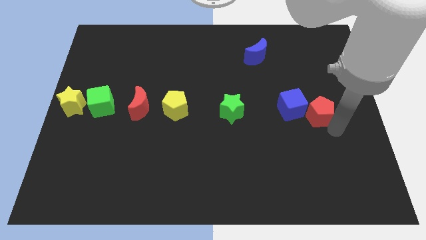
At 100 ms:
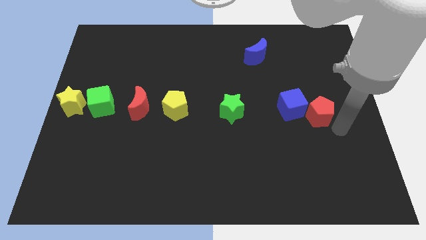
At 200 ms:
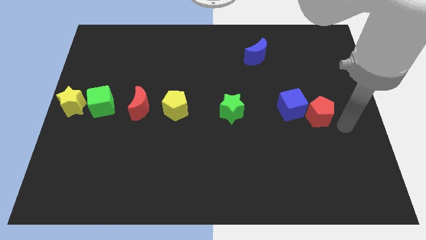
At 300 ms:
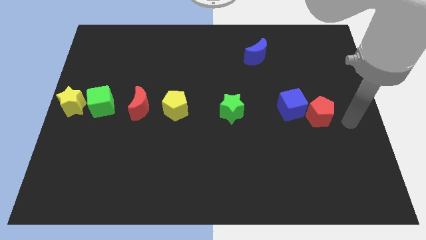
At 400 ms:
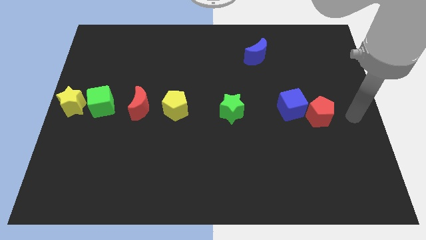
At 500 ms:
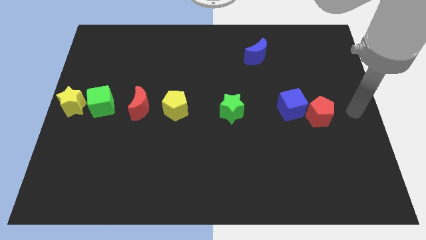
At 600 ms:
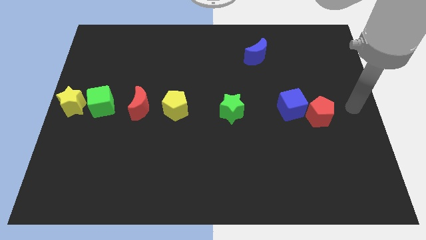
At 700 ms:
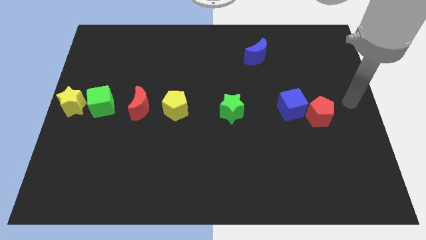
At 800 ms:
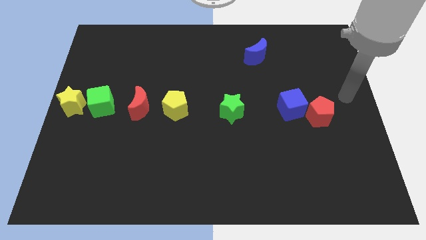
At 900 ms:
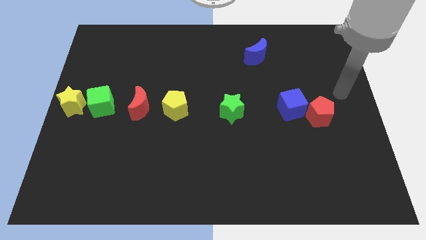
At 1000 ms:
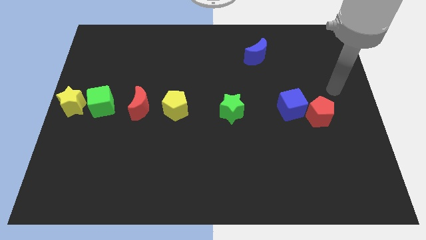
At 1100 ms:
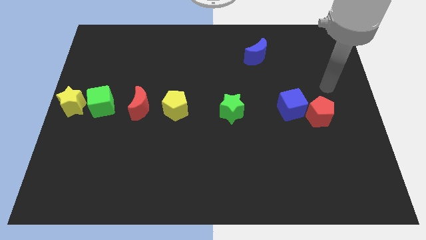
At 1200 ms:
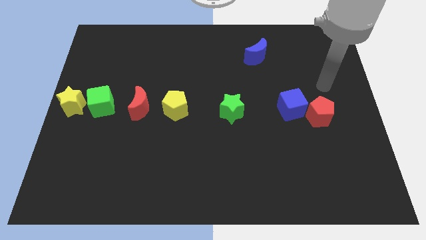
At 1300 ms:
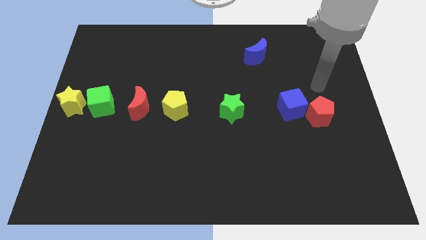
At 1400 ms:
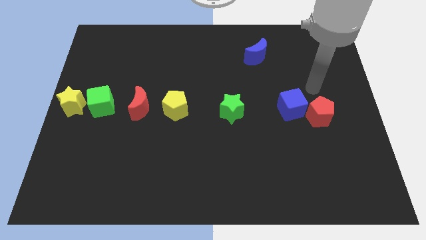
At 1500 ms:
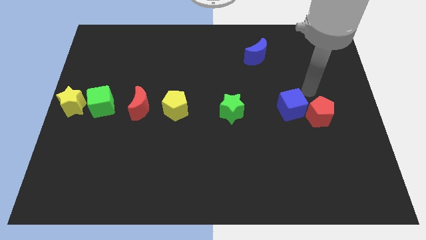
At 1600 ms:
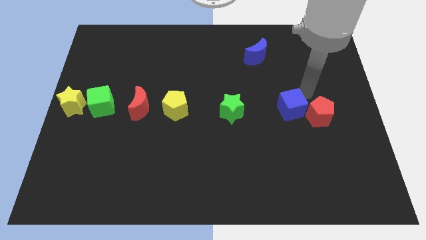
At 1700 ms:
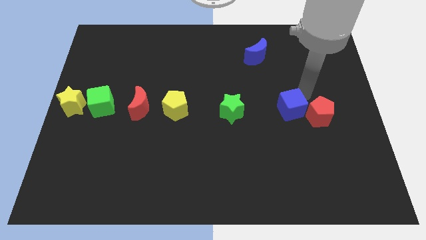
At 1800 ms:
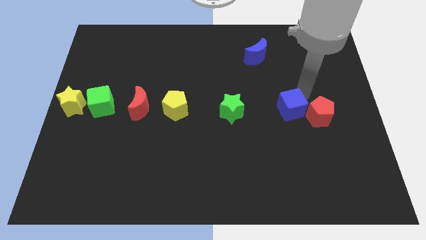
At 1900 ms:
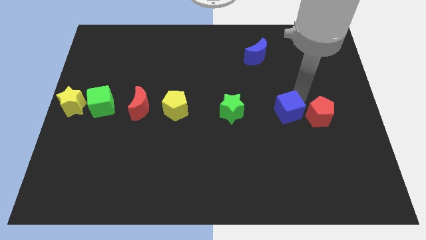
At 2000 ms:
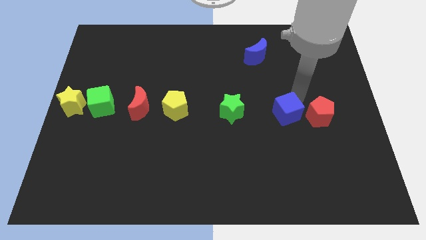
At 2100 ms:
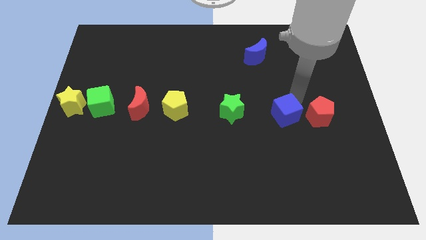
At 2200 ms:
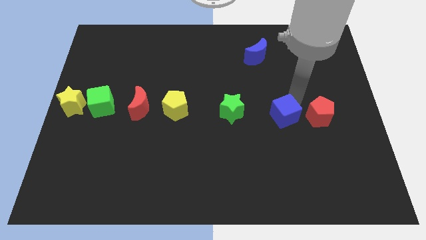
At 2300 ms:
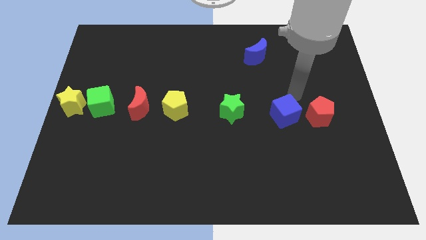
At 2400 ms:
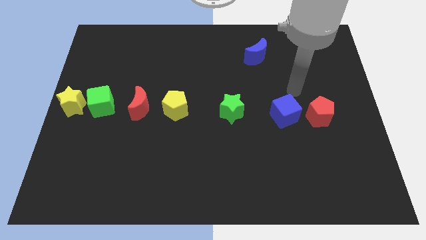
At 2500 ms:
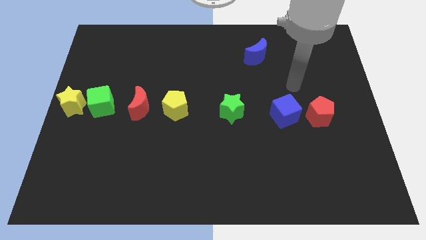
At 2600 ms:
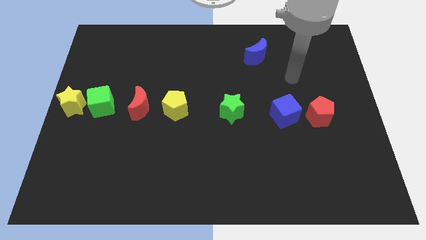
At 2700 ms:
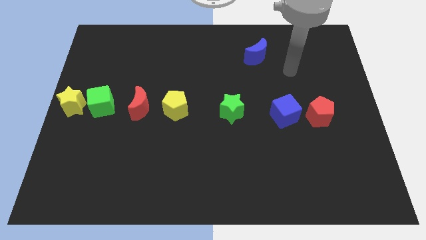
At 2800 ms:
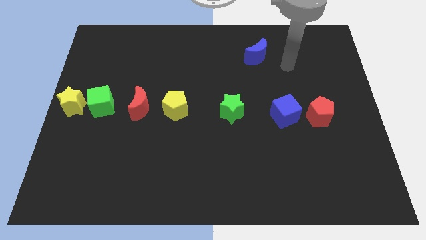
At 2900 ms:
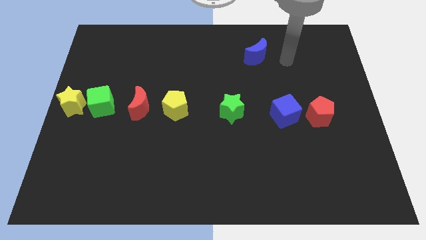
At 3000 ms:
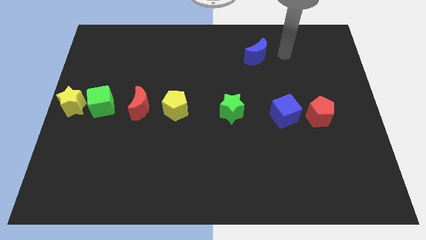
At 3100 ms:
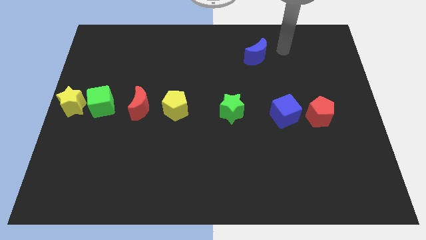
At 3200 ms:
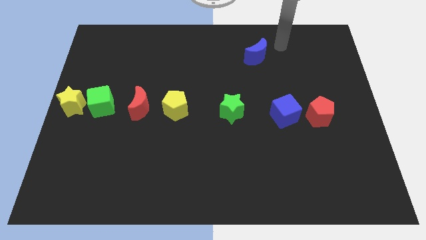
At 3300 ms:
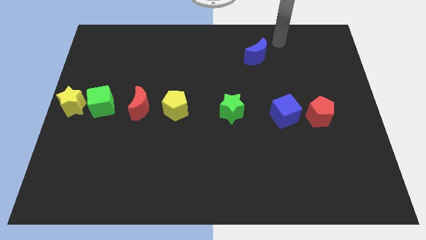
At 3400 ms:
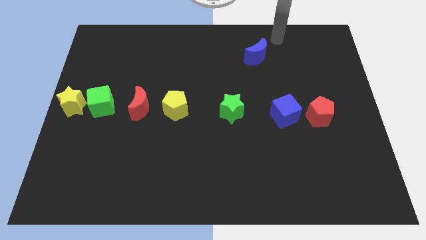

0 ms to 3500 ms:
push the blue cube slightly to the left side of the red pentagon

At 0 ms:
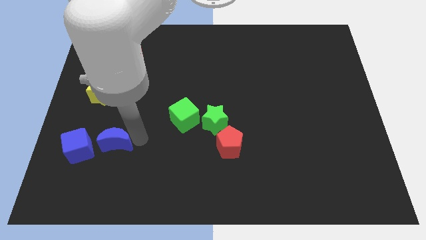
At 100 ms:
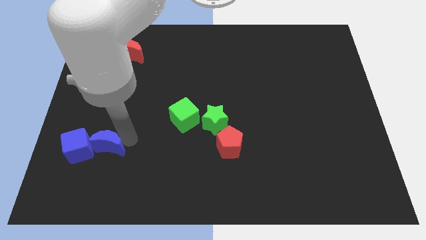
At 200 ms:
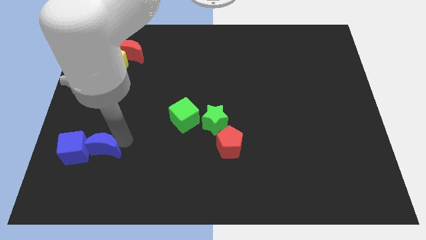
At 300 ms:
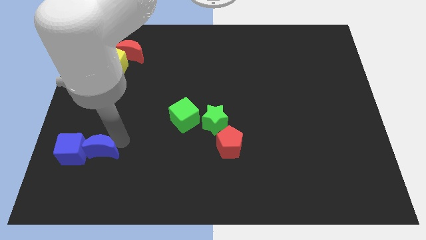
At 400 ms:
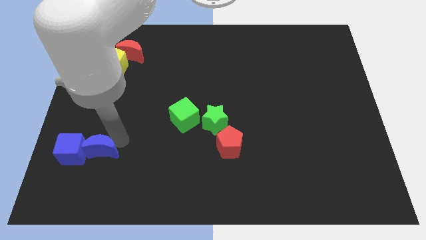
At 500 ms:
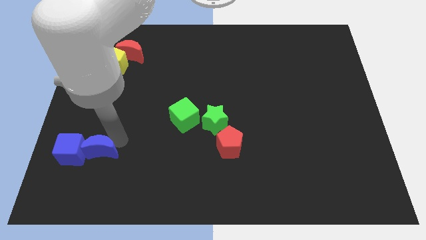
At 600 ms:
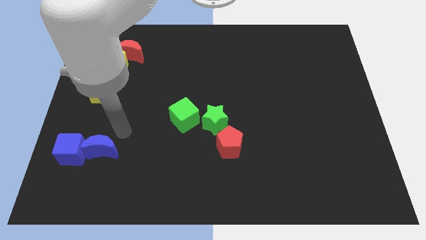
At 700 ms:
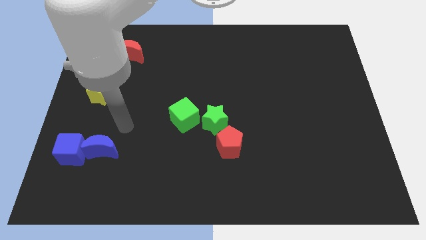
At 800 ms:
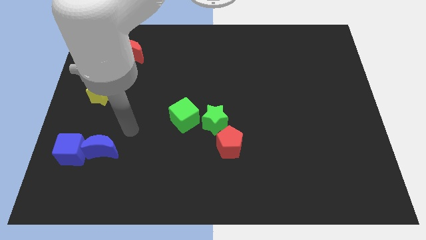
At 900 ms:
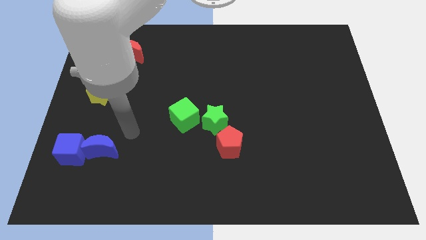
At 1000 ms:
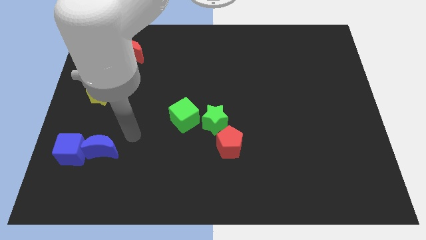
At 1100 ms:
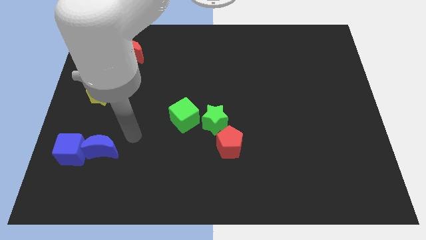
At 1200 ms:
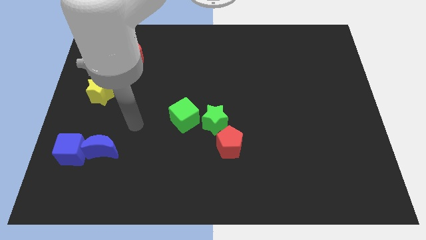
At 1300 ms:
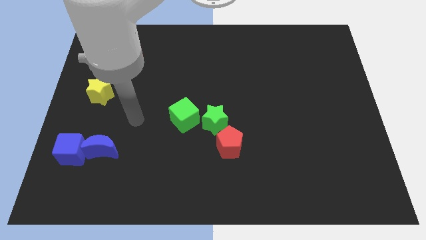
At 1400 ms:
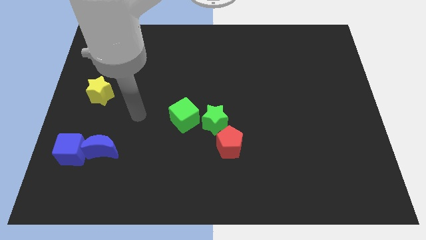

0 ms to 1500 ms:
move the blue moon into blue cube

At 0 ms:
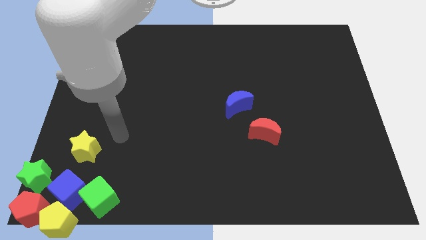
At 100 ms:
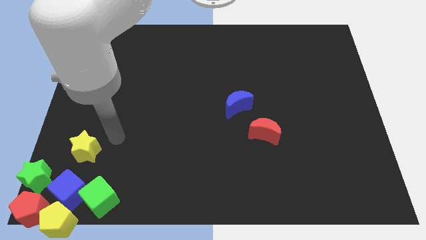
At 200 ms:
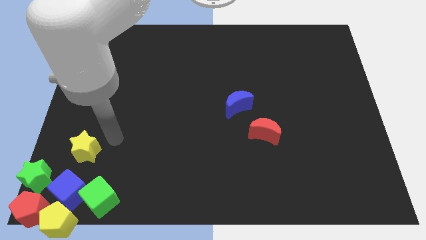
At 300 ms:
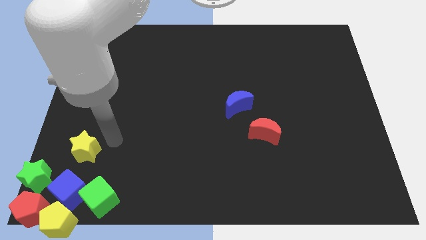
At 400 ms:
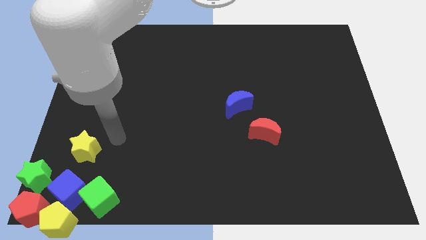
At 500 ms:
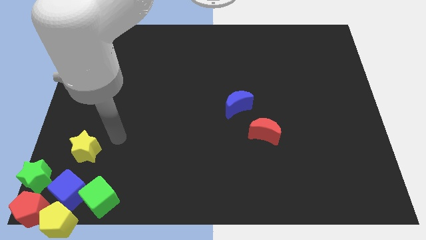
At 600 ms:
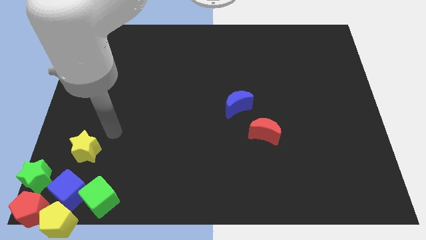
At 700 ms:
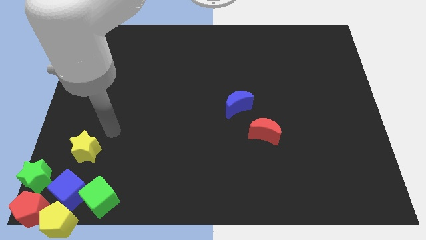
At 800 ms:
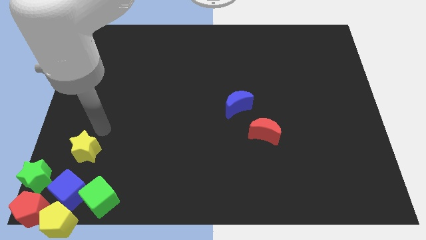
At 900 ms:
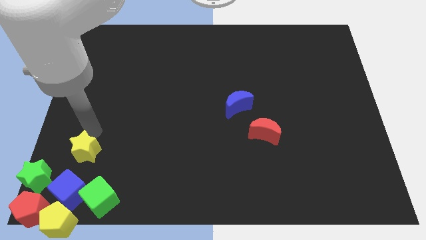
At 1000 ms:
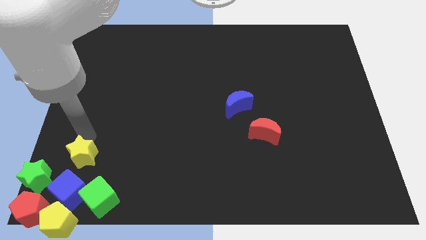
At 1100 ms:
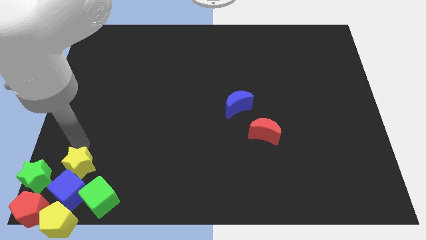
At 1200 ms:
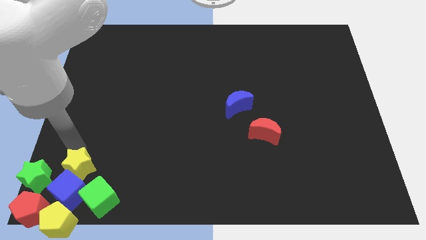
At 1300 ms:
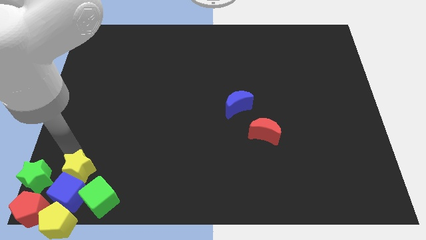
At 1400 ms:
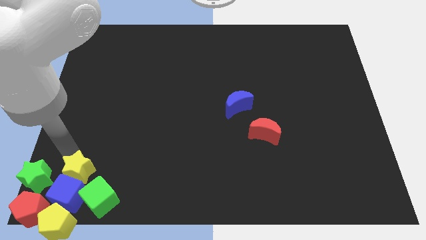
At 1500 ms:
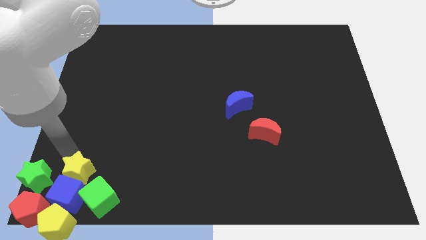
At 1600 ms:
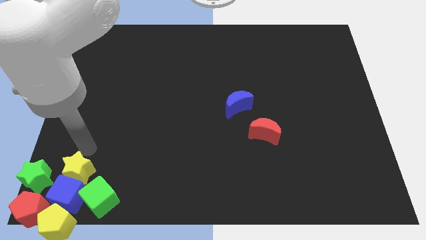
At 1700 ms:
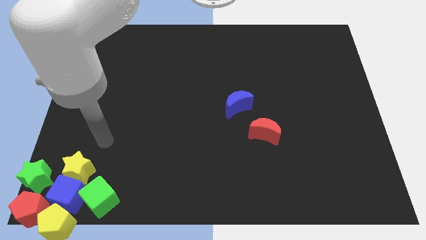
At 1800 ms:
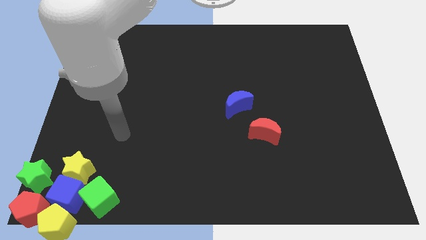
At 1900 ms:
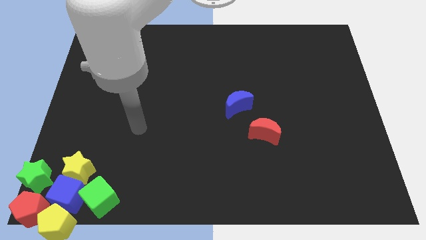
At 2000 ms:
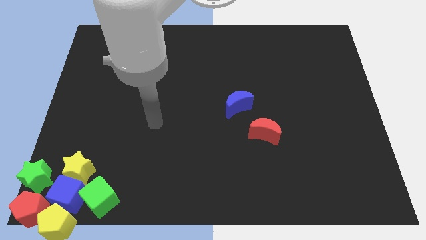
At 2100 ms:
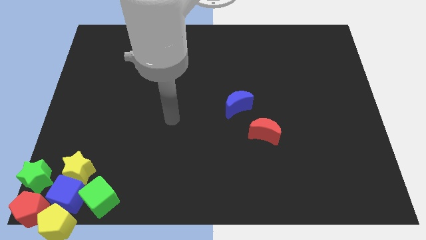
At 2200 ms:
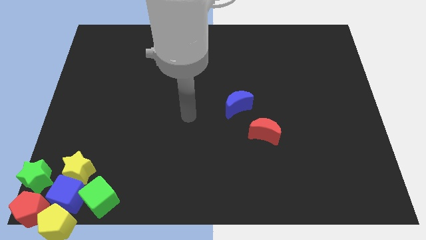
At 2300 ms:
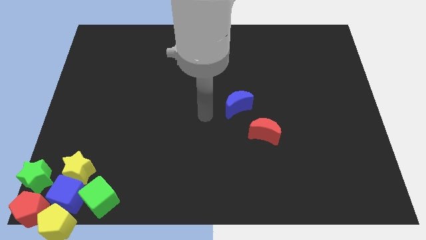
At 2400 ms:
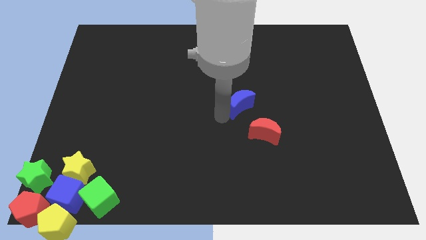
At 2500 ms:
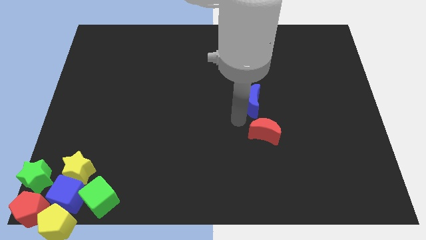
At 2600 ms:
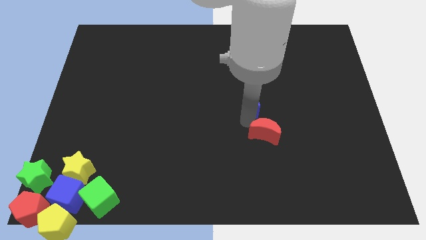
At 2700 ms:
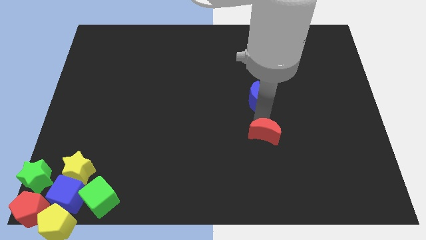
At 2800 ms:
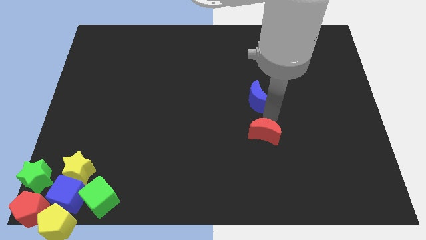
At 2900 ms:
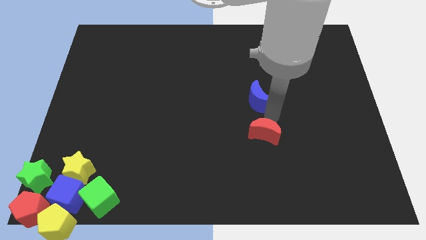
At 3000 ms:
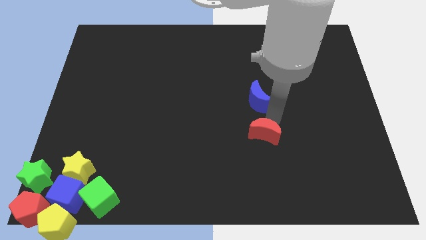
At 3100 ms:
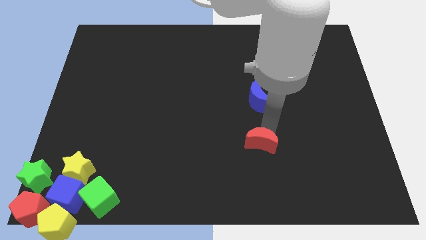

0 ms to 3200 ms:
place the yellow star at the top of the blue cube

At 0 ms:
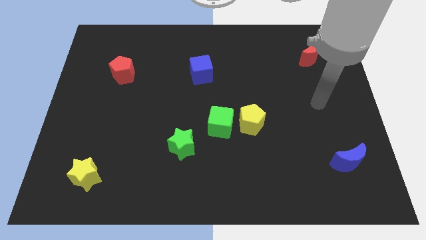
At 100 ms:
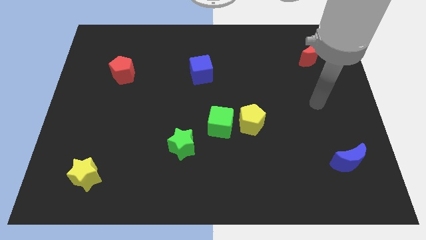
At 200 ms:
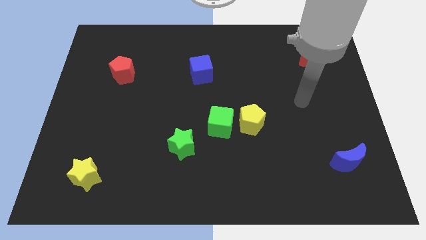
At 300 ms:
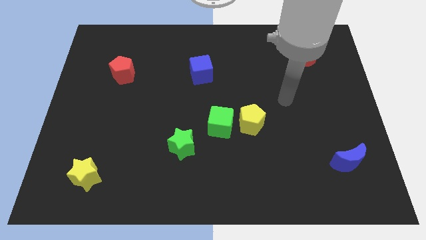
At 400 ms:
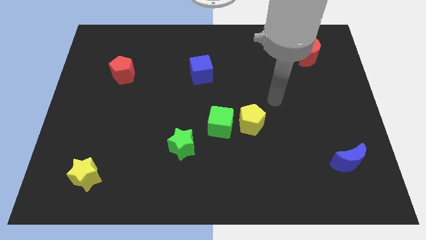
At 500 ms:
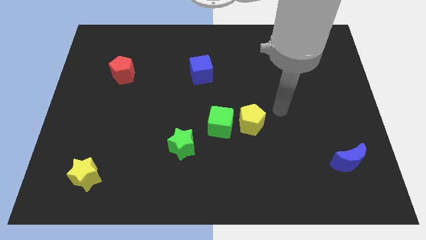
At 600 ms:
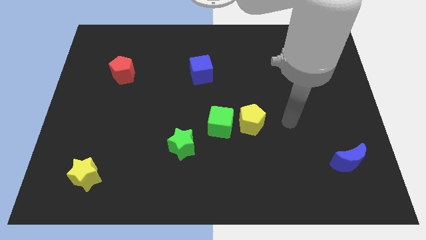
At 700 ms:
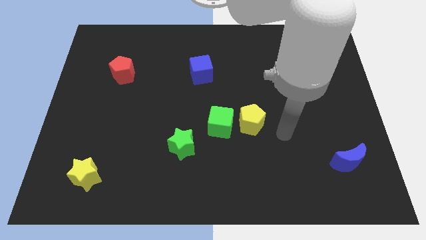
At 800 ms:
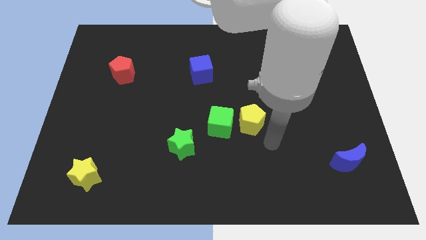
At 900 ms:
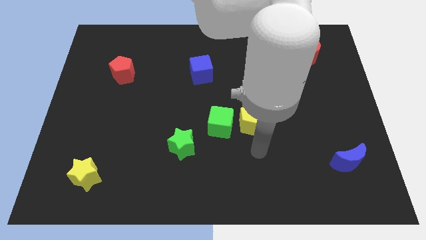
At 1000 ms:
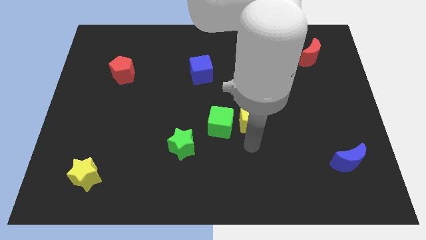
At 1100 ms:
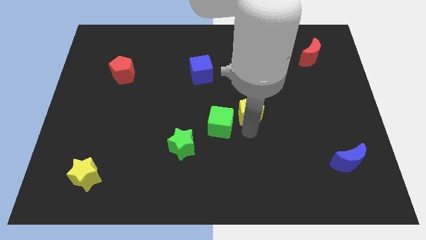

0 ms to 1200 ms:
move your arm to the bottom of the yellow pentagon
